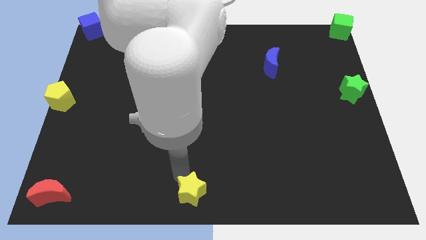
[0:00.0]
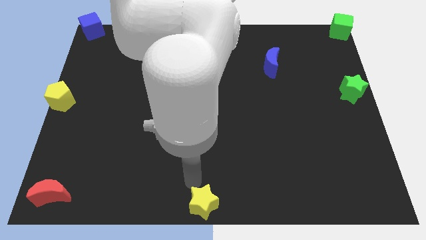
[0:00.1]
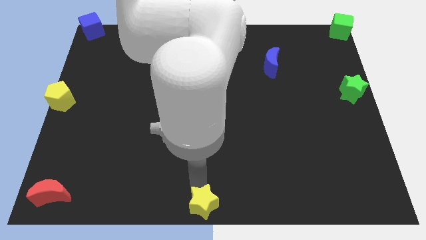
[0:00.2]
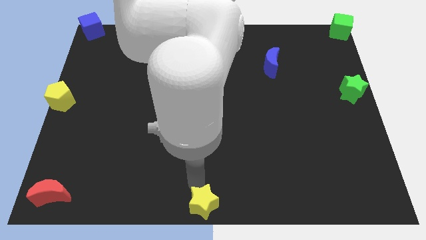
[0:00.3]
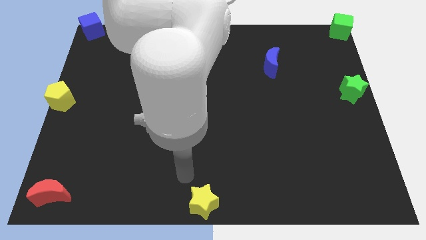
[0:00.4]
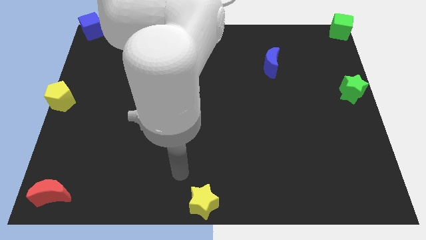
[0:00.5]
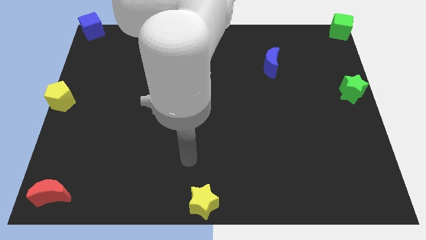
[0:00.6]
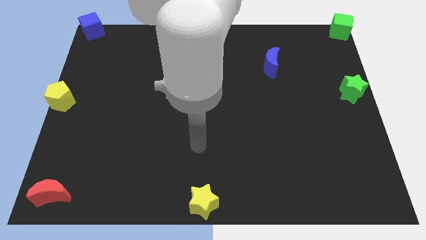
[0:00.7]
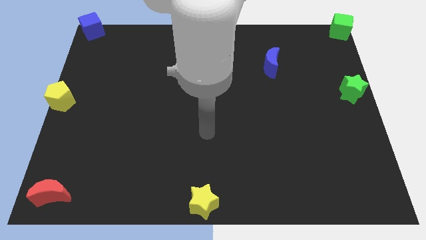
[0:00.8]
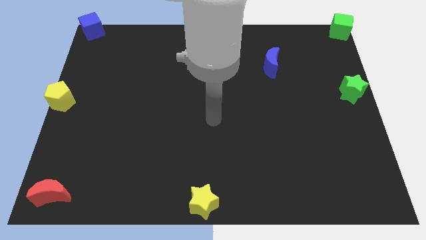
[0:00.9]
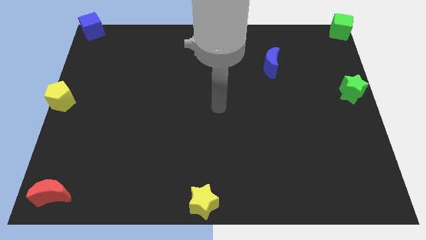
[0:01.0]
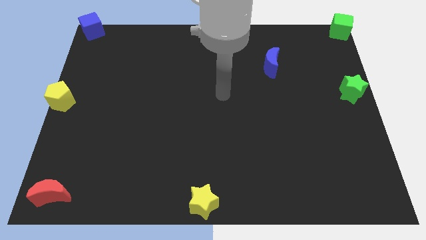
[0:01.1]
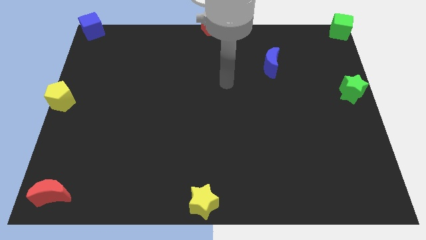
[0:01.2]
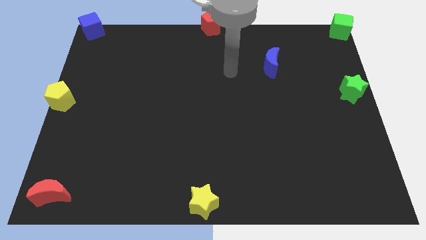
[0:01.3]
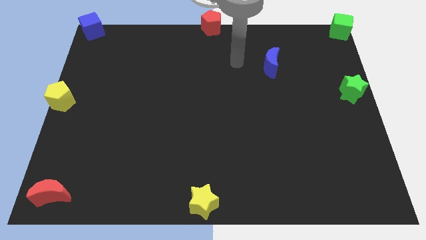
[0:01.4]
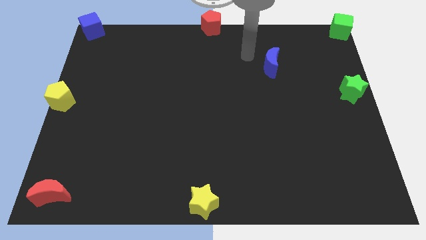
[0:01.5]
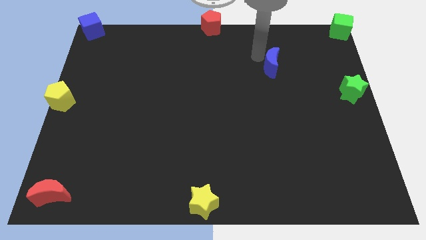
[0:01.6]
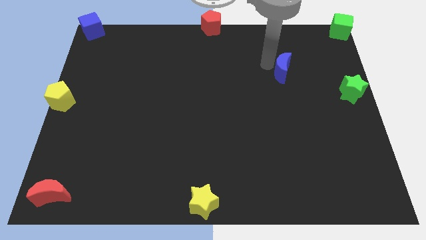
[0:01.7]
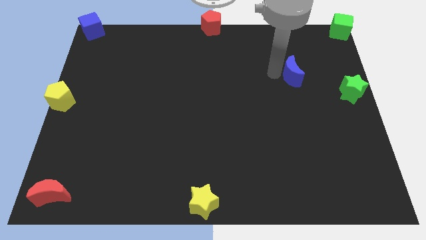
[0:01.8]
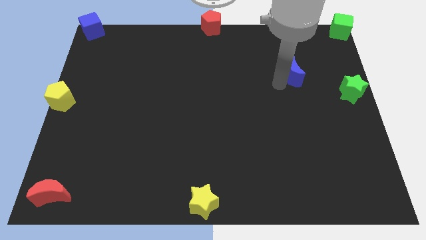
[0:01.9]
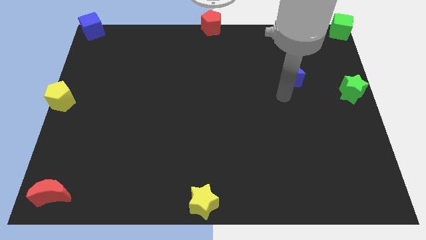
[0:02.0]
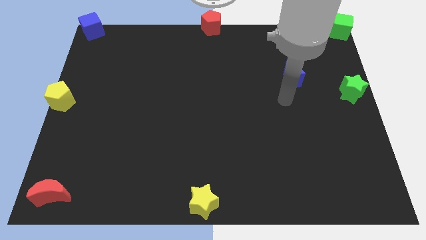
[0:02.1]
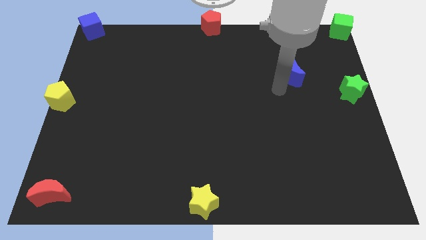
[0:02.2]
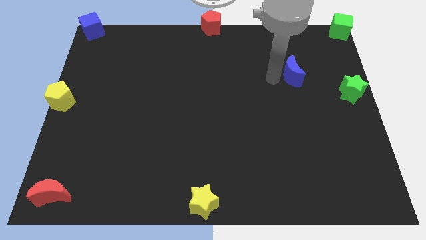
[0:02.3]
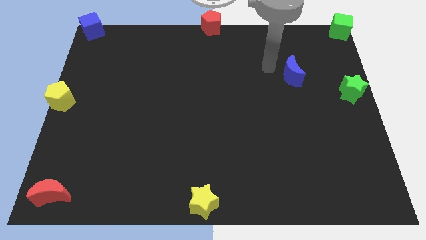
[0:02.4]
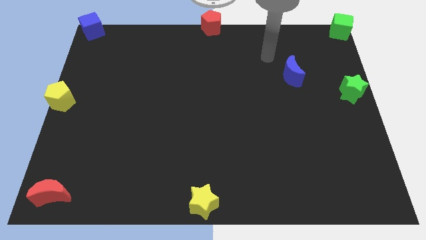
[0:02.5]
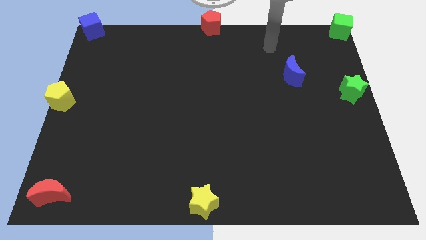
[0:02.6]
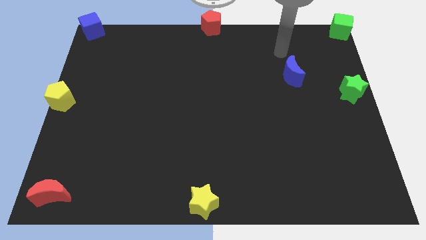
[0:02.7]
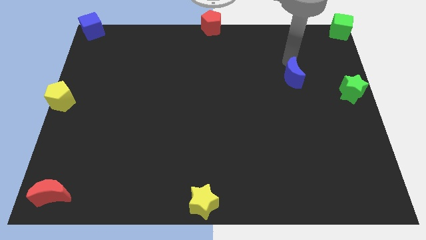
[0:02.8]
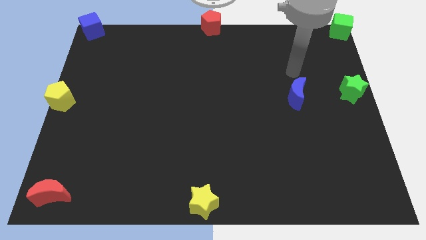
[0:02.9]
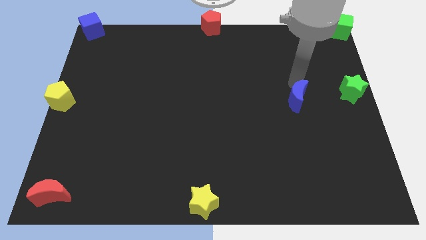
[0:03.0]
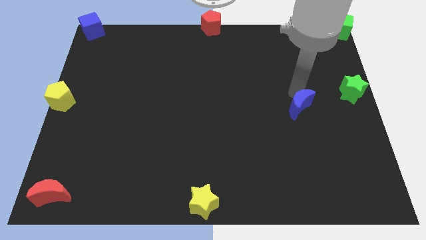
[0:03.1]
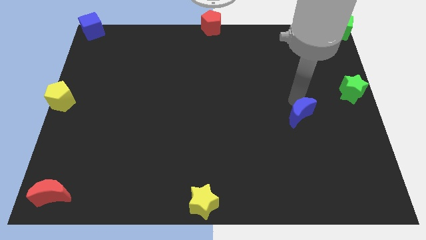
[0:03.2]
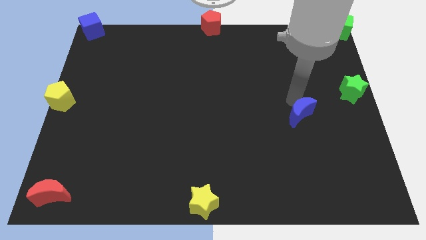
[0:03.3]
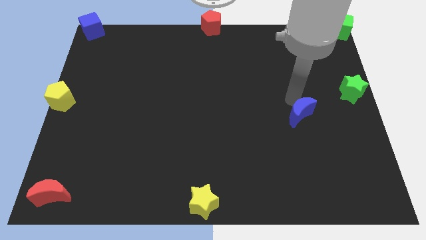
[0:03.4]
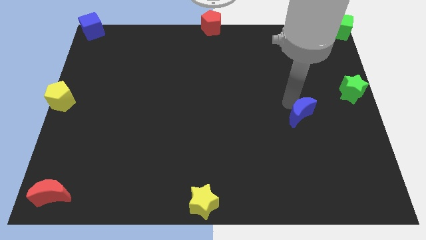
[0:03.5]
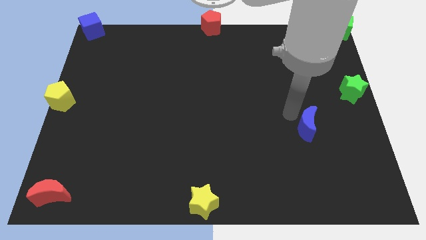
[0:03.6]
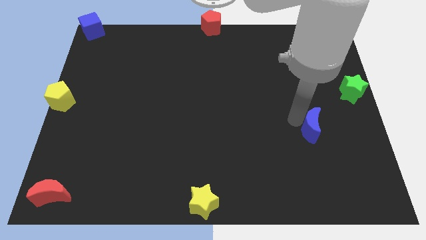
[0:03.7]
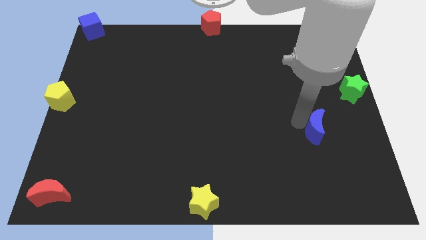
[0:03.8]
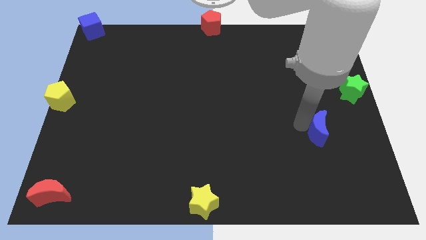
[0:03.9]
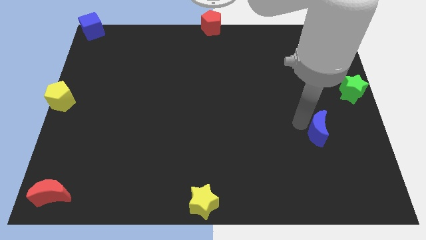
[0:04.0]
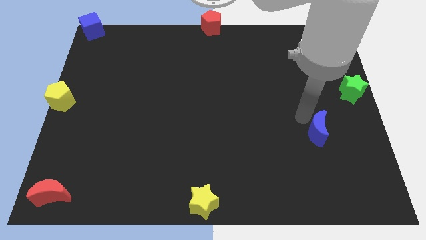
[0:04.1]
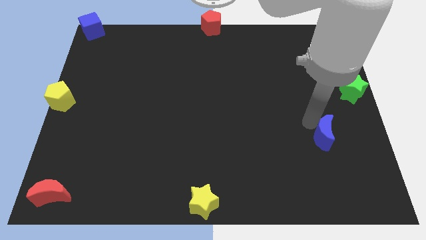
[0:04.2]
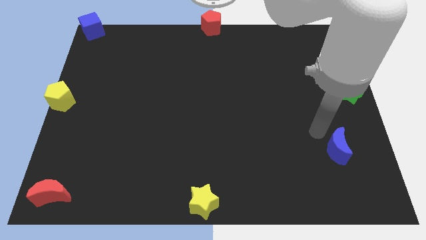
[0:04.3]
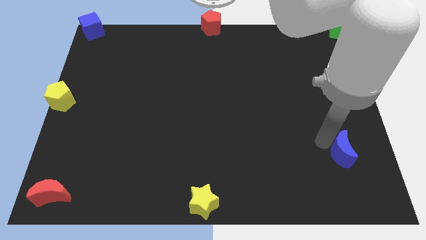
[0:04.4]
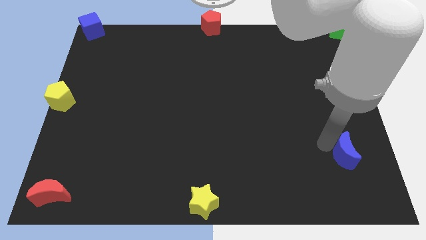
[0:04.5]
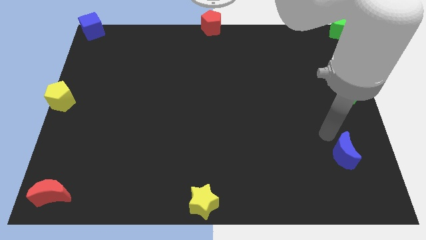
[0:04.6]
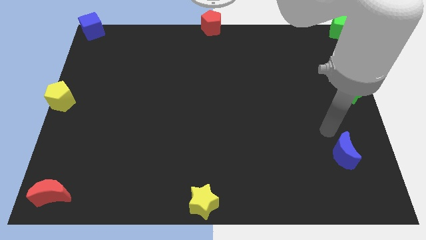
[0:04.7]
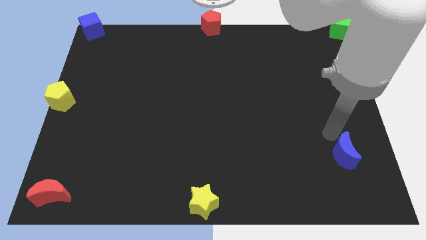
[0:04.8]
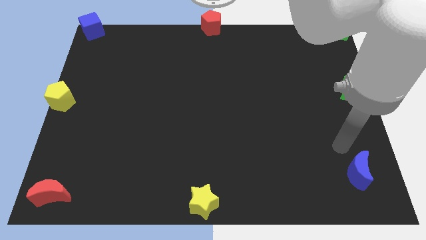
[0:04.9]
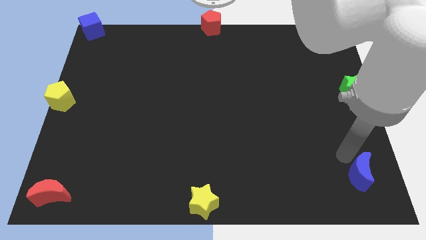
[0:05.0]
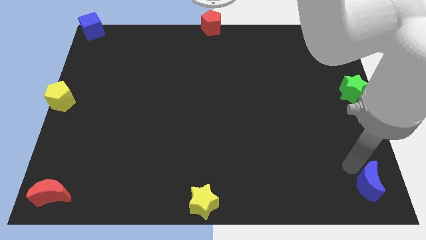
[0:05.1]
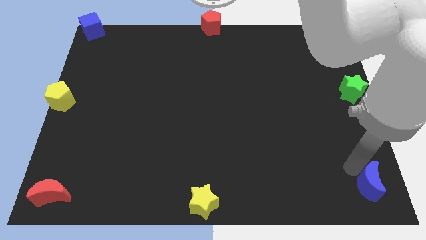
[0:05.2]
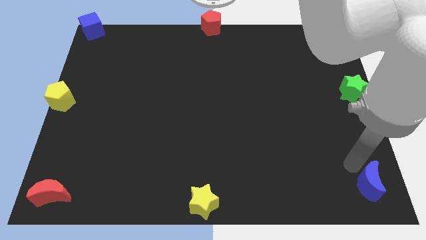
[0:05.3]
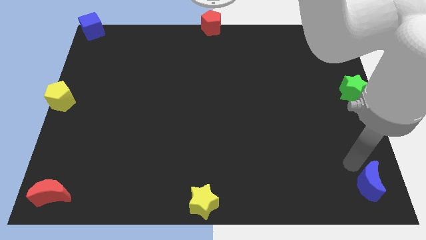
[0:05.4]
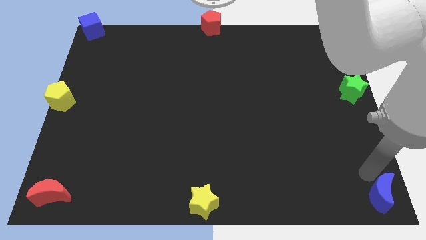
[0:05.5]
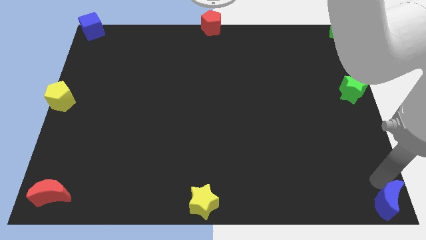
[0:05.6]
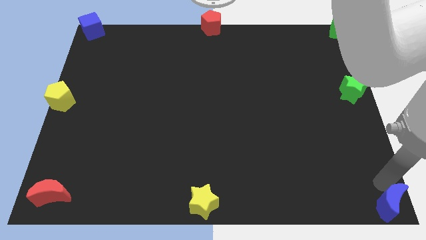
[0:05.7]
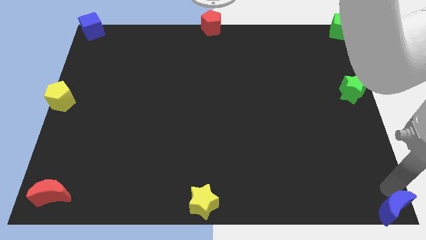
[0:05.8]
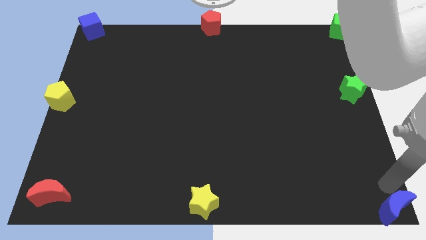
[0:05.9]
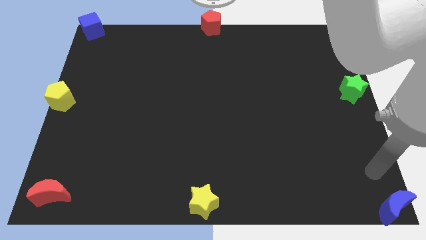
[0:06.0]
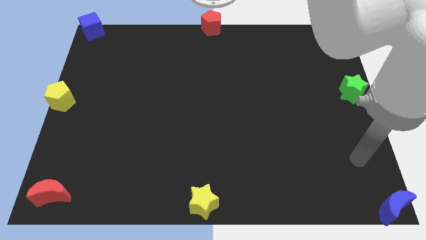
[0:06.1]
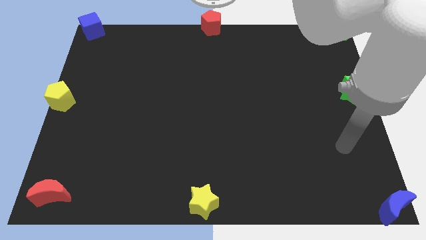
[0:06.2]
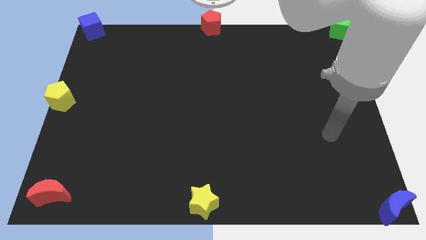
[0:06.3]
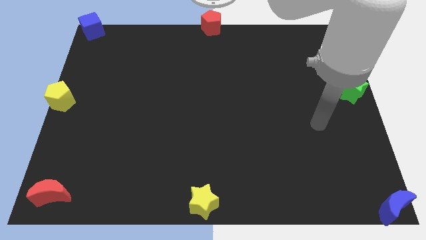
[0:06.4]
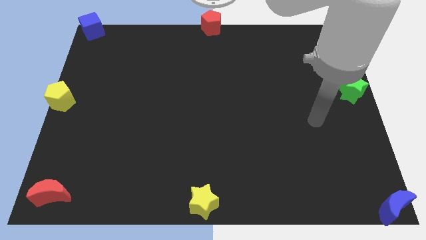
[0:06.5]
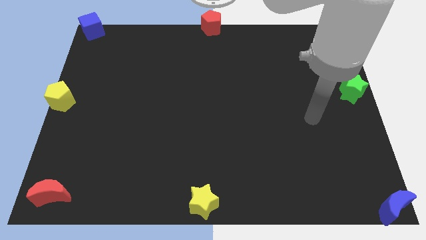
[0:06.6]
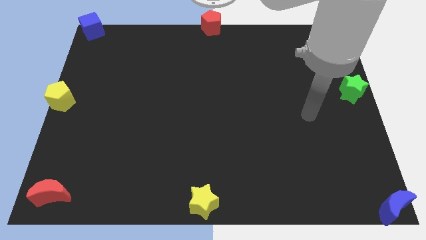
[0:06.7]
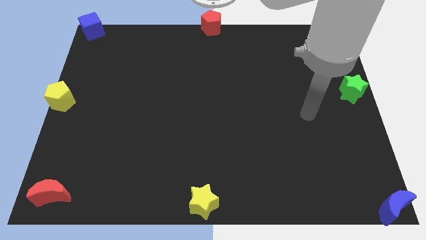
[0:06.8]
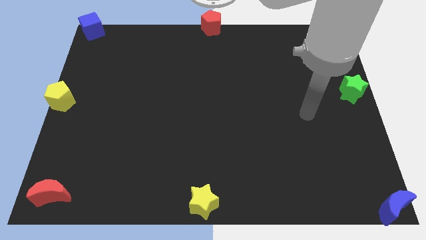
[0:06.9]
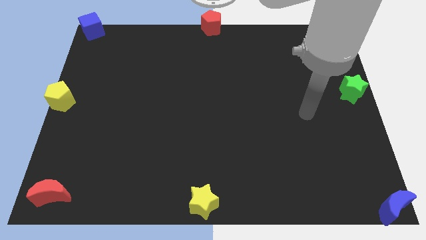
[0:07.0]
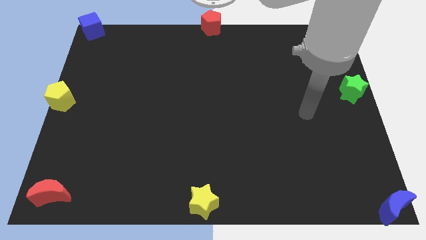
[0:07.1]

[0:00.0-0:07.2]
push the blue crescent to the right corner

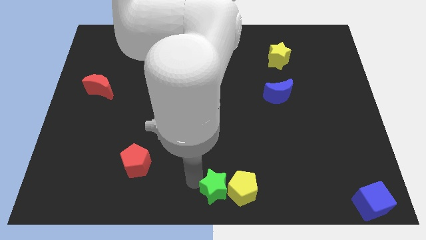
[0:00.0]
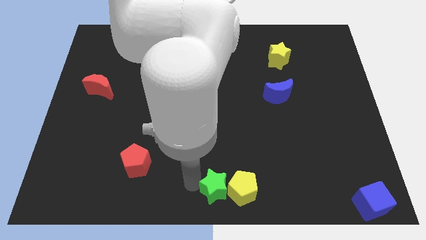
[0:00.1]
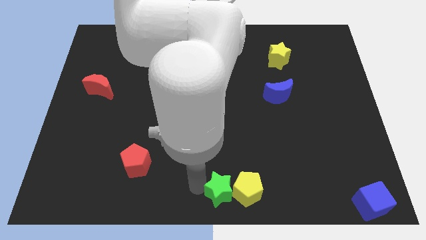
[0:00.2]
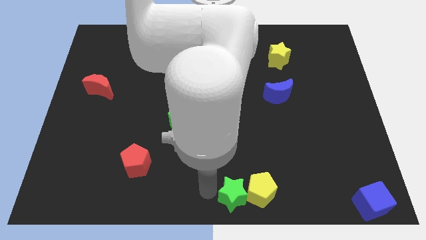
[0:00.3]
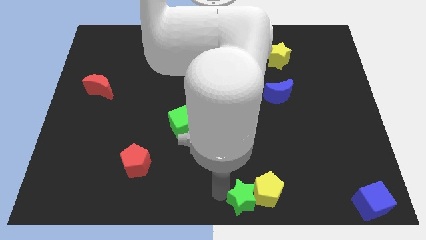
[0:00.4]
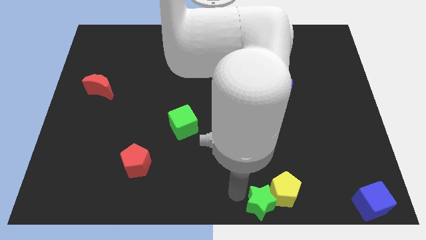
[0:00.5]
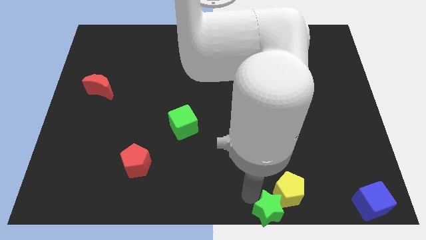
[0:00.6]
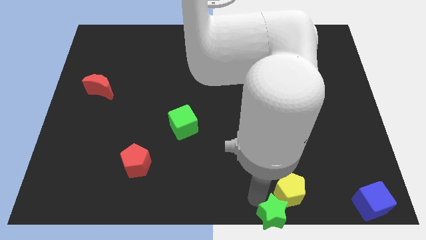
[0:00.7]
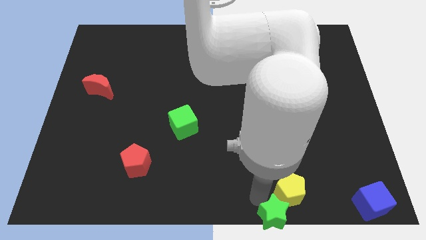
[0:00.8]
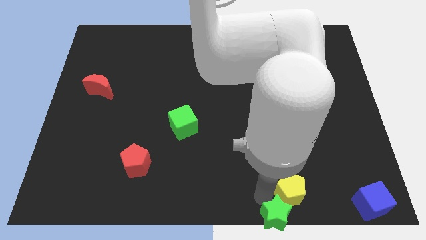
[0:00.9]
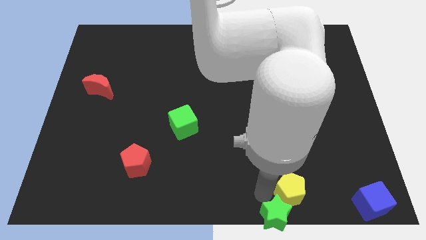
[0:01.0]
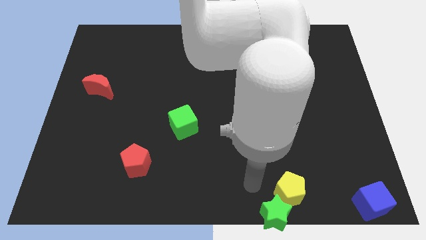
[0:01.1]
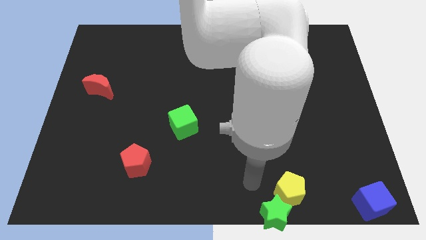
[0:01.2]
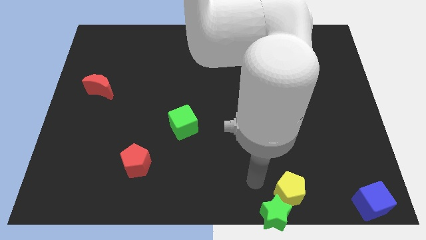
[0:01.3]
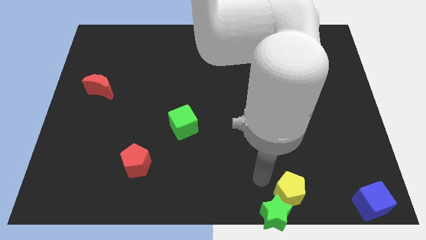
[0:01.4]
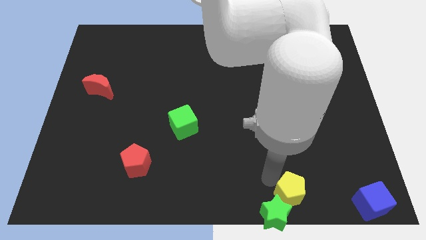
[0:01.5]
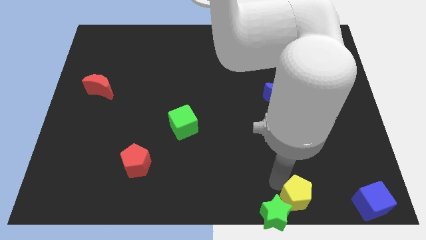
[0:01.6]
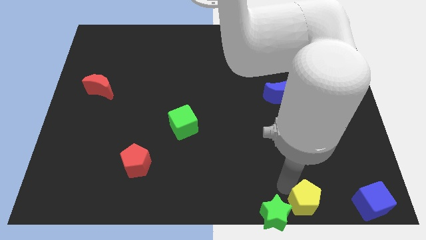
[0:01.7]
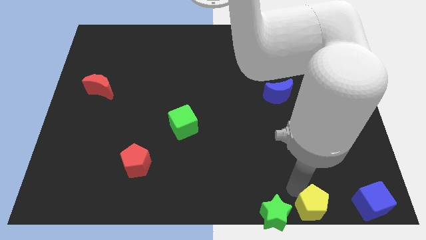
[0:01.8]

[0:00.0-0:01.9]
drag the yellow pentagon and green star to bottom center
